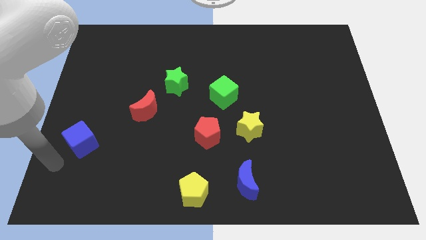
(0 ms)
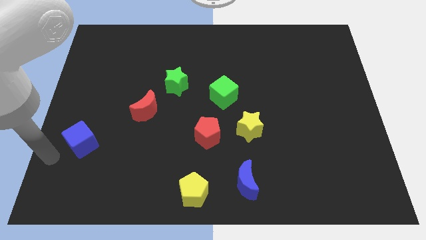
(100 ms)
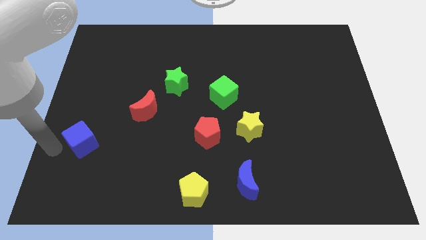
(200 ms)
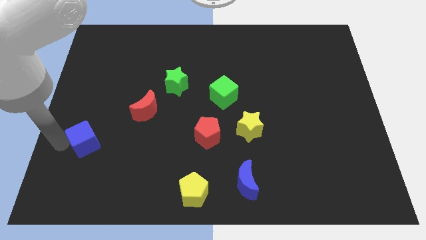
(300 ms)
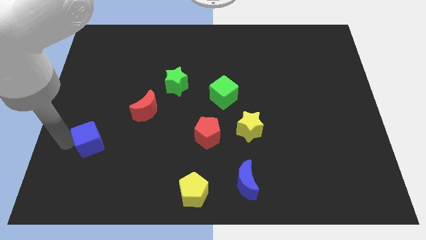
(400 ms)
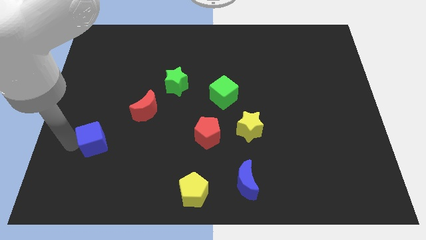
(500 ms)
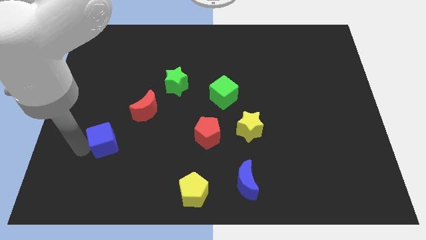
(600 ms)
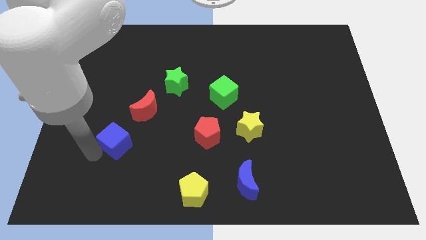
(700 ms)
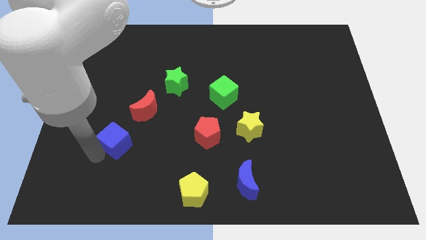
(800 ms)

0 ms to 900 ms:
push blue cube slightly towards right side

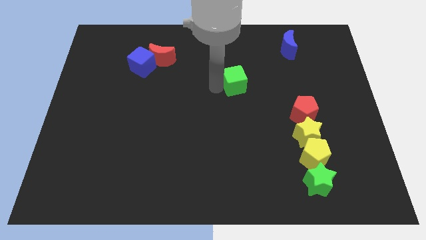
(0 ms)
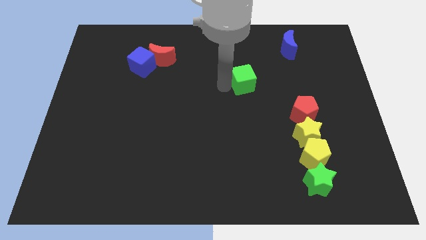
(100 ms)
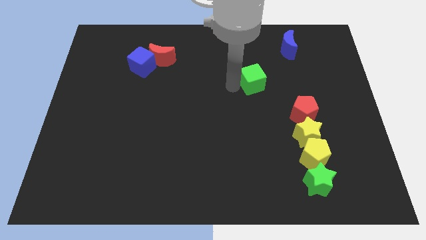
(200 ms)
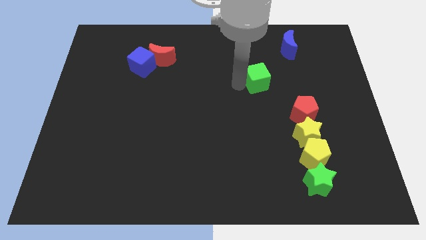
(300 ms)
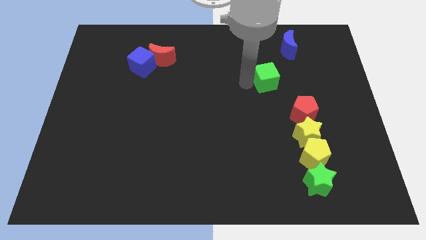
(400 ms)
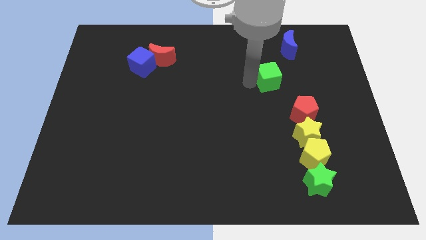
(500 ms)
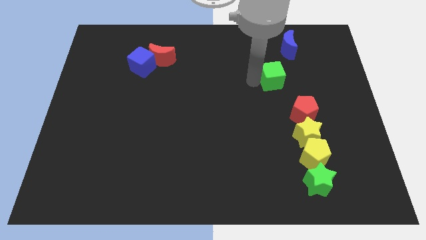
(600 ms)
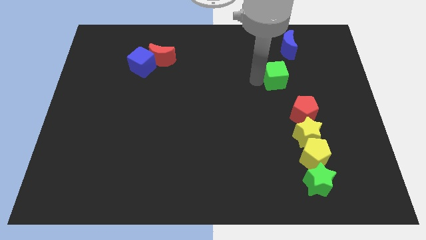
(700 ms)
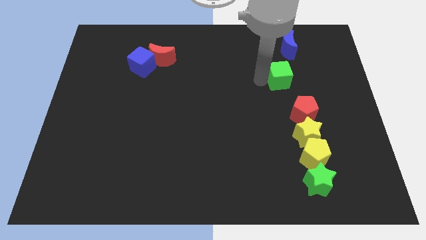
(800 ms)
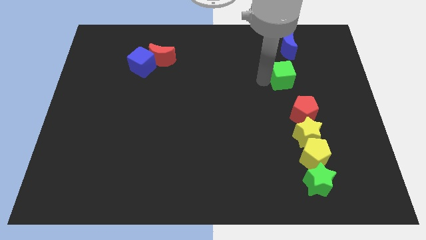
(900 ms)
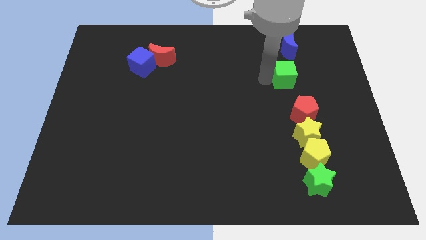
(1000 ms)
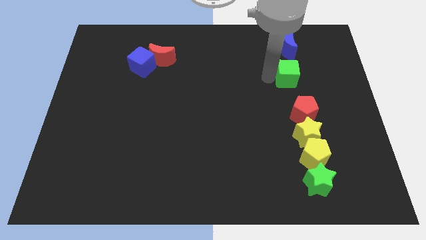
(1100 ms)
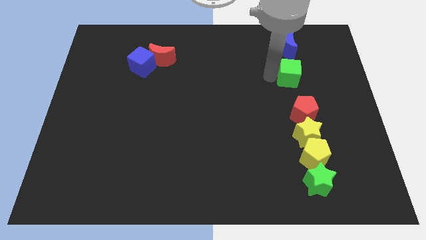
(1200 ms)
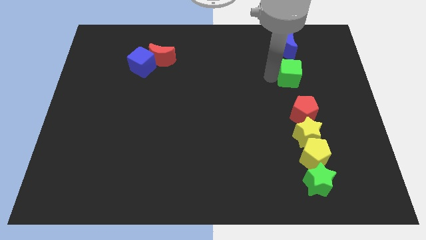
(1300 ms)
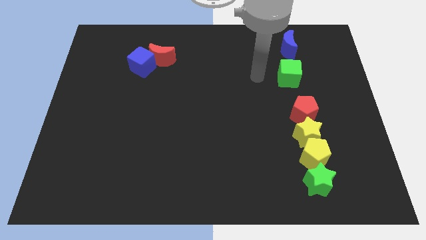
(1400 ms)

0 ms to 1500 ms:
push the green cube in between the blue moon and red pentagon

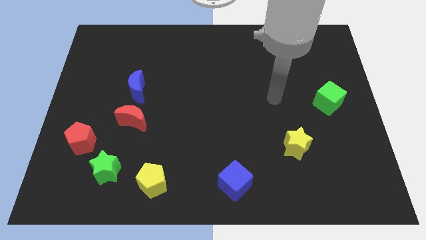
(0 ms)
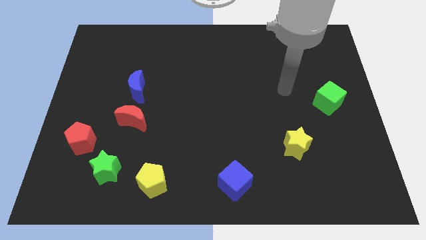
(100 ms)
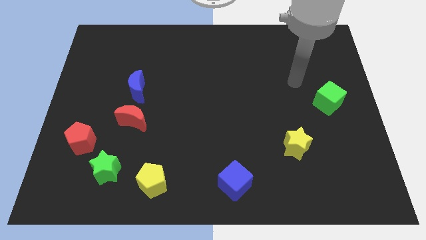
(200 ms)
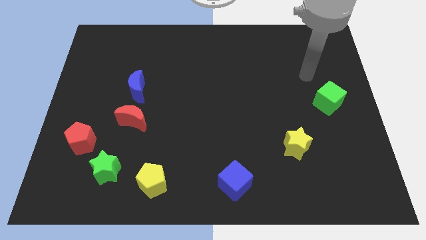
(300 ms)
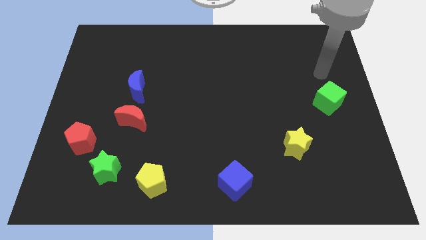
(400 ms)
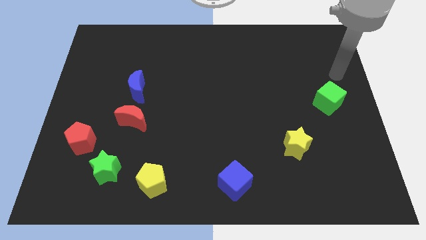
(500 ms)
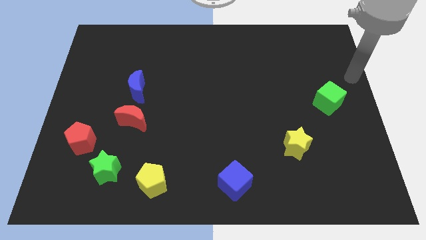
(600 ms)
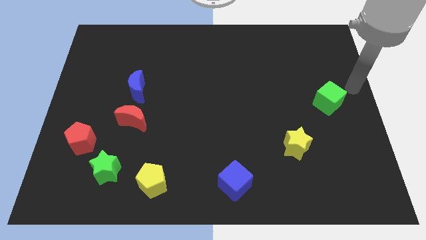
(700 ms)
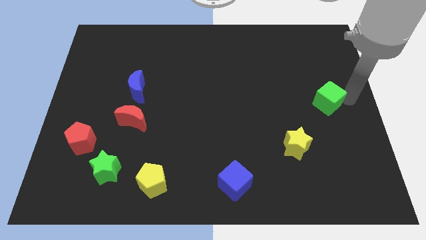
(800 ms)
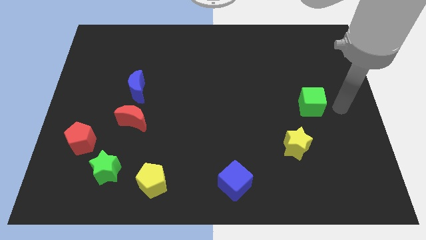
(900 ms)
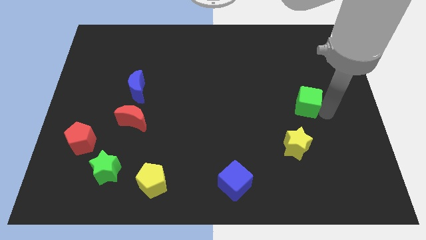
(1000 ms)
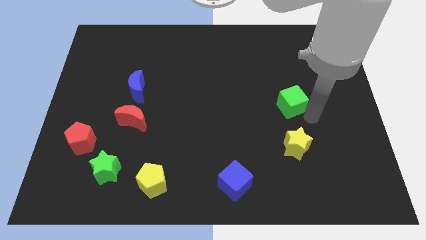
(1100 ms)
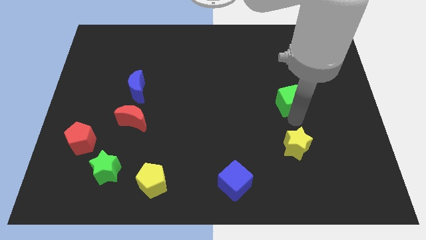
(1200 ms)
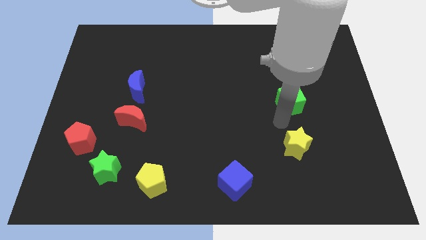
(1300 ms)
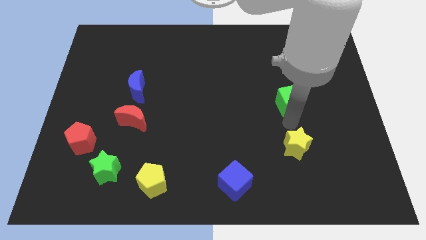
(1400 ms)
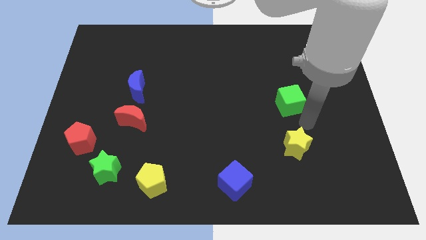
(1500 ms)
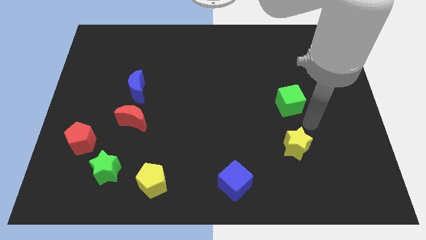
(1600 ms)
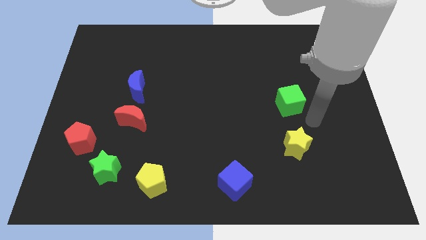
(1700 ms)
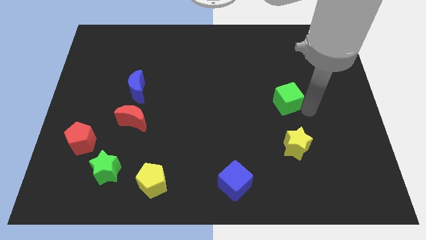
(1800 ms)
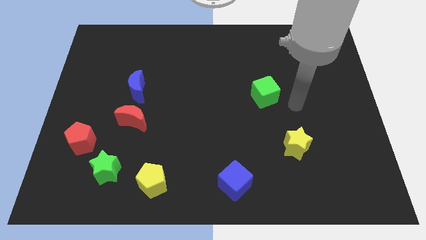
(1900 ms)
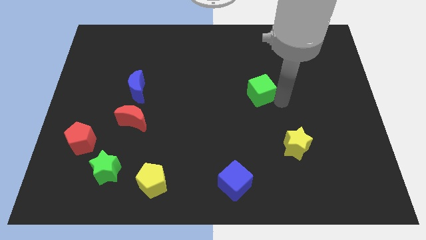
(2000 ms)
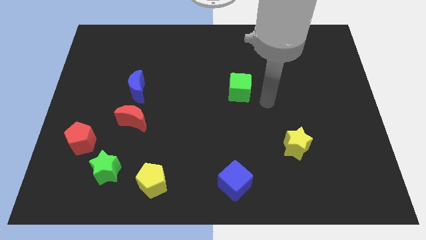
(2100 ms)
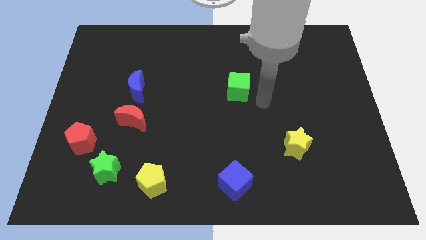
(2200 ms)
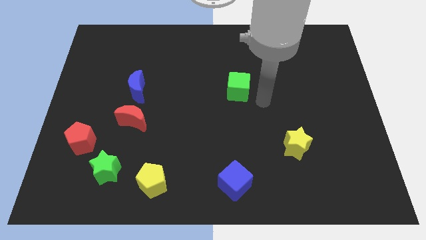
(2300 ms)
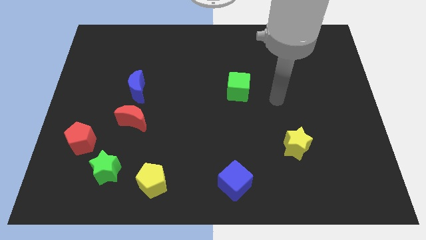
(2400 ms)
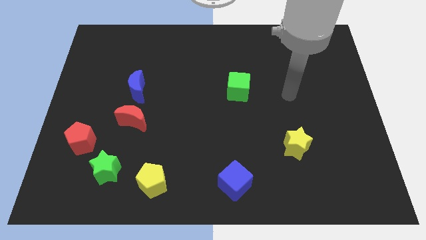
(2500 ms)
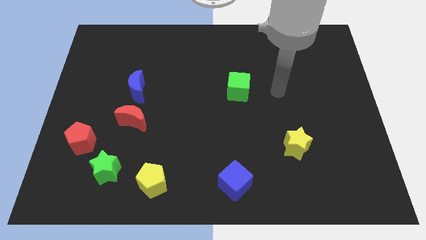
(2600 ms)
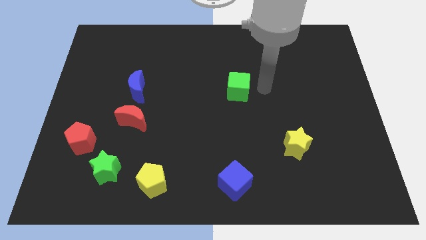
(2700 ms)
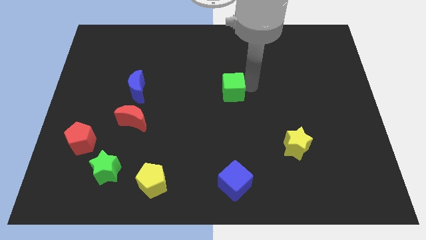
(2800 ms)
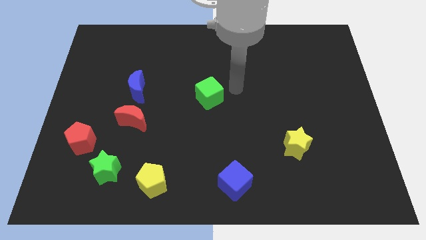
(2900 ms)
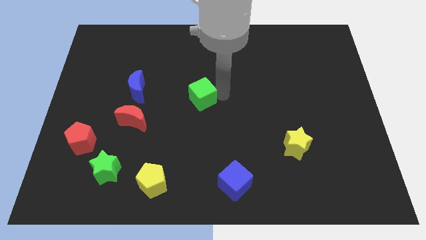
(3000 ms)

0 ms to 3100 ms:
place green cube to the right of blue moon

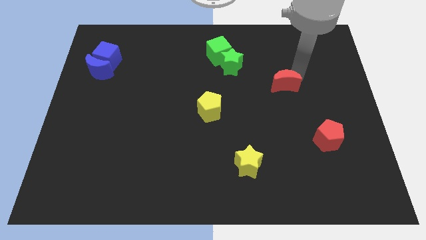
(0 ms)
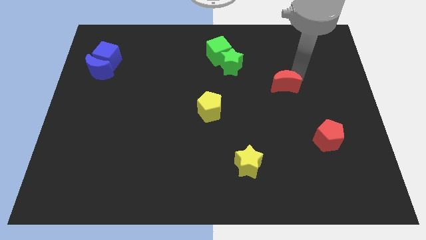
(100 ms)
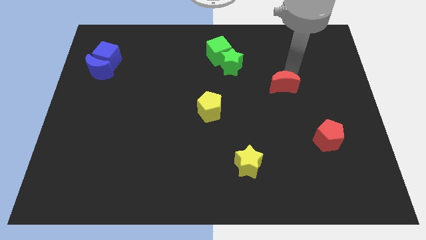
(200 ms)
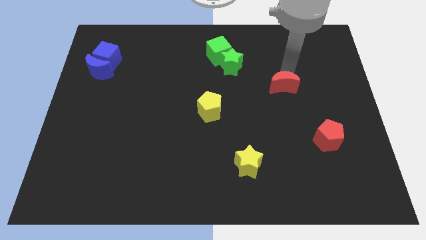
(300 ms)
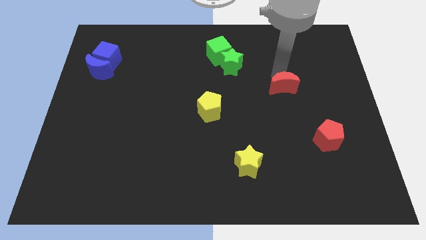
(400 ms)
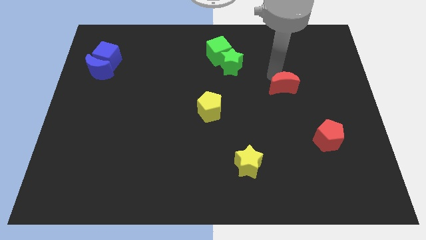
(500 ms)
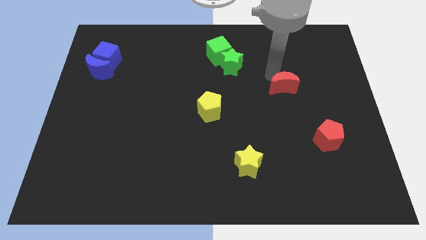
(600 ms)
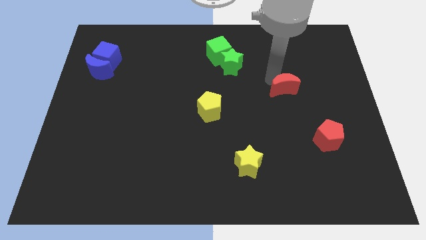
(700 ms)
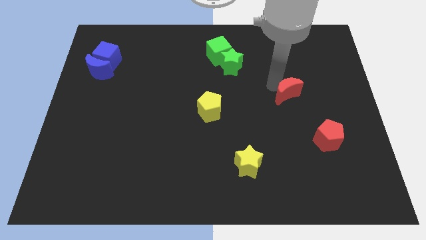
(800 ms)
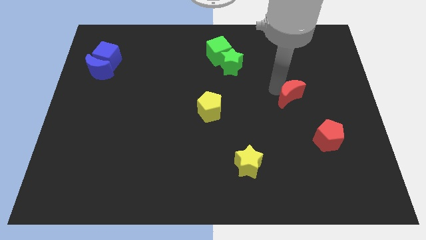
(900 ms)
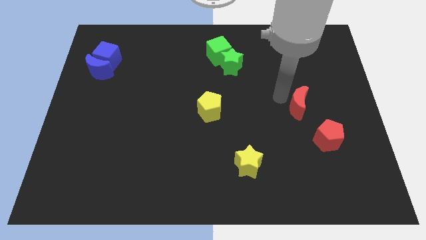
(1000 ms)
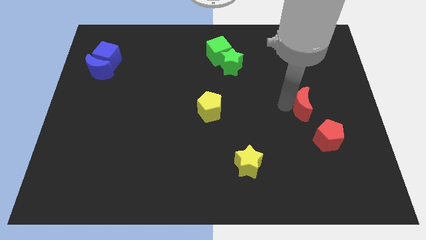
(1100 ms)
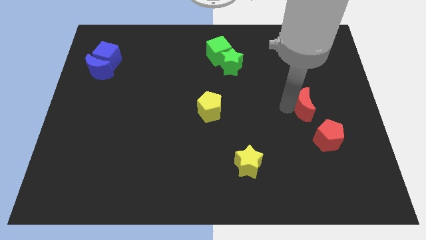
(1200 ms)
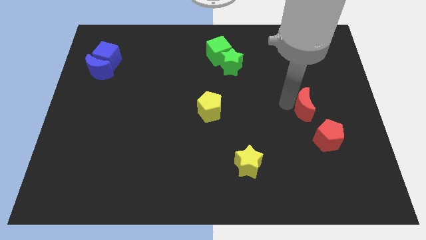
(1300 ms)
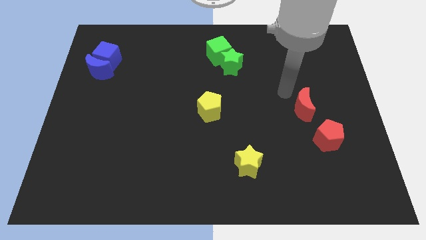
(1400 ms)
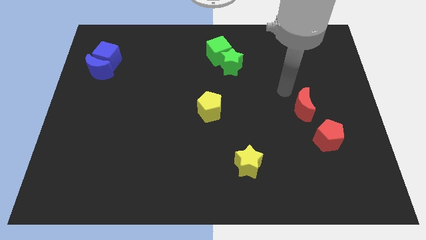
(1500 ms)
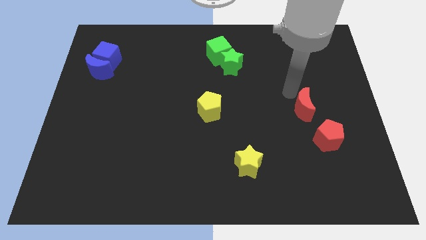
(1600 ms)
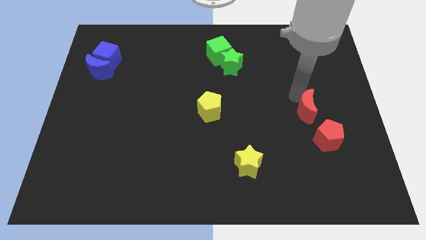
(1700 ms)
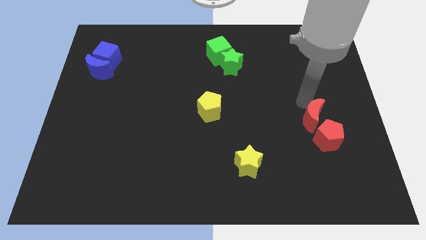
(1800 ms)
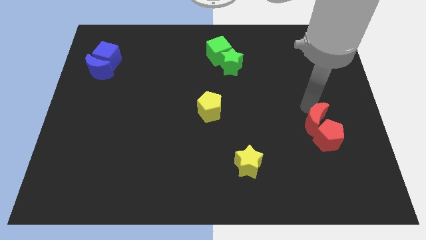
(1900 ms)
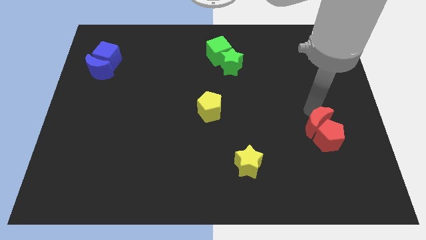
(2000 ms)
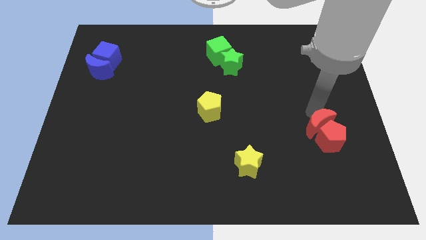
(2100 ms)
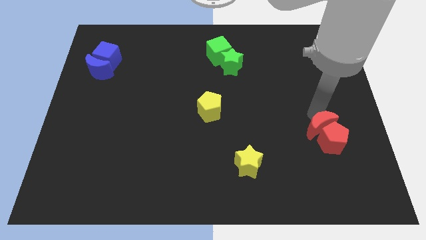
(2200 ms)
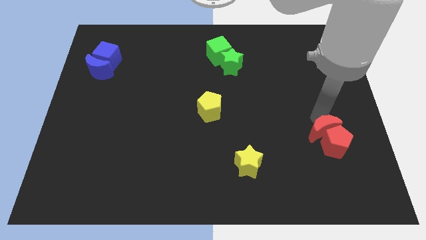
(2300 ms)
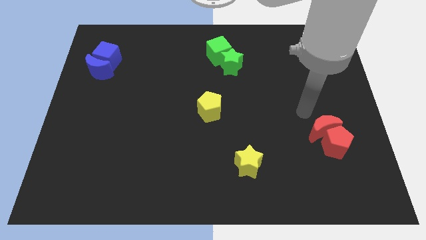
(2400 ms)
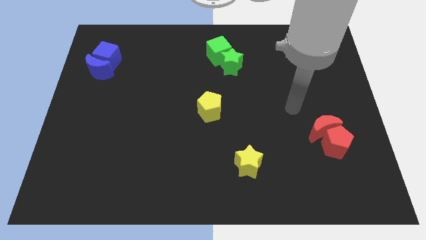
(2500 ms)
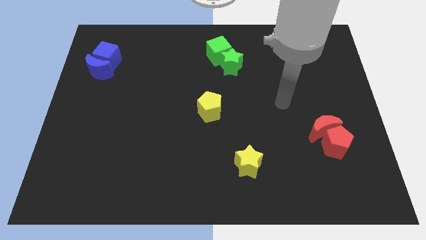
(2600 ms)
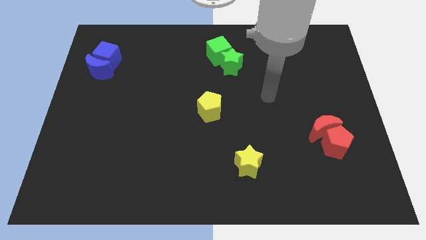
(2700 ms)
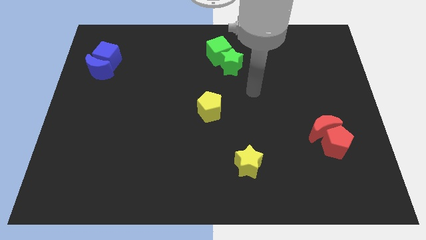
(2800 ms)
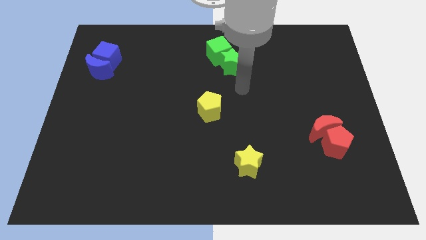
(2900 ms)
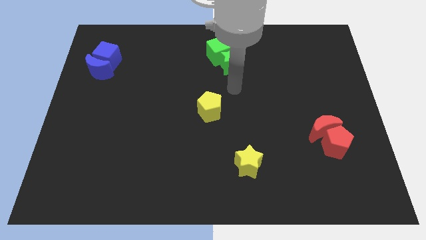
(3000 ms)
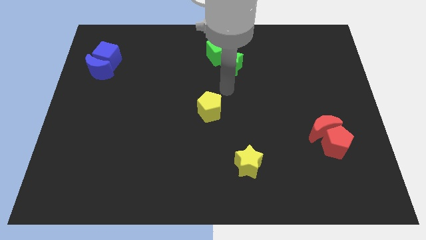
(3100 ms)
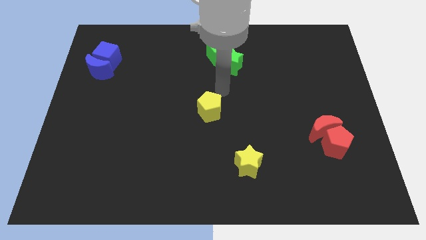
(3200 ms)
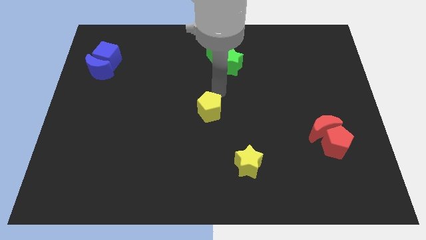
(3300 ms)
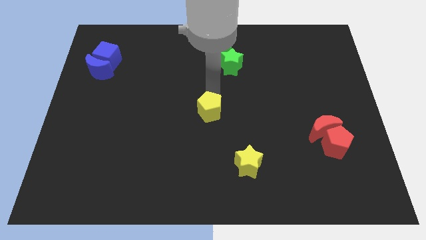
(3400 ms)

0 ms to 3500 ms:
place the red moon on the top of the red pentagon
